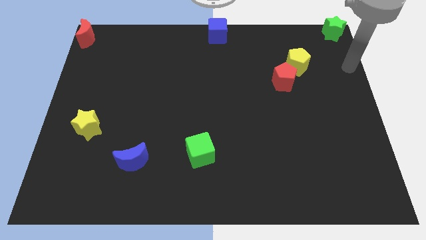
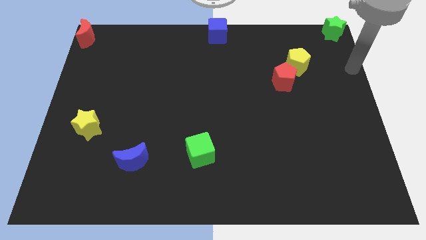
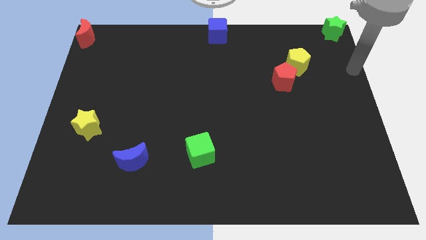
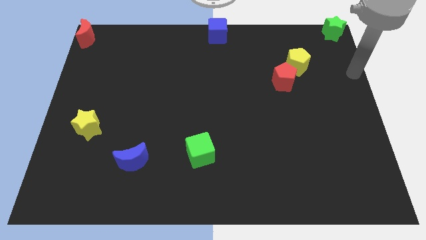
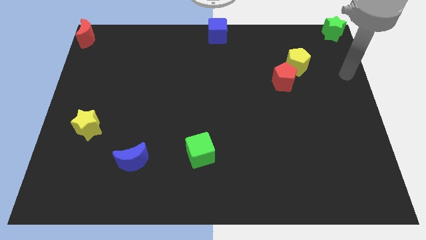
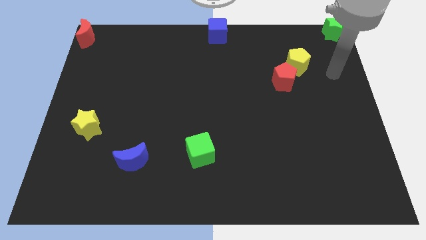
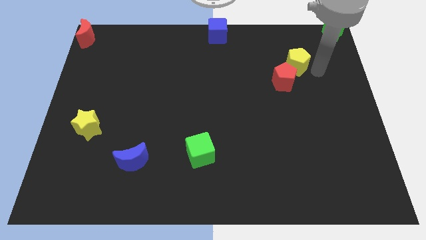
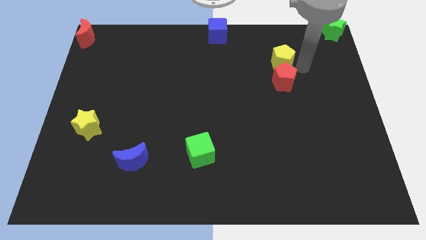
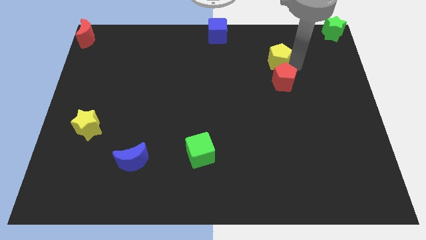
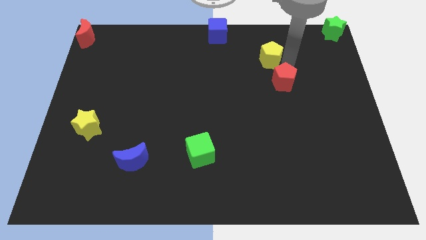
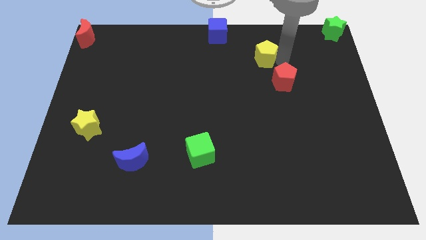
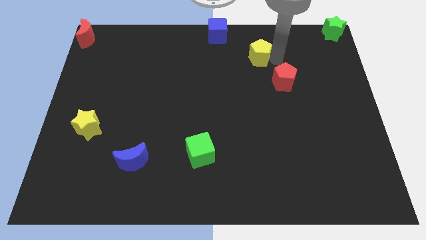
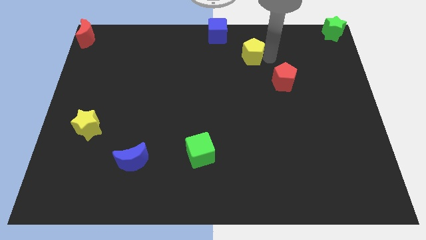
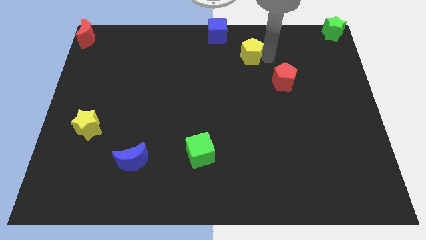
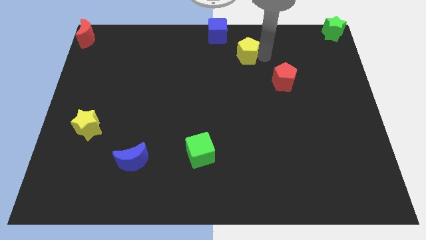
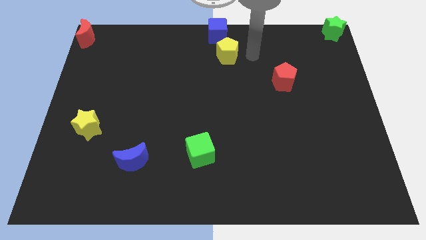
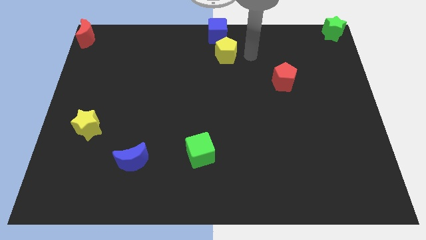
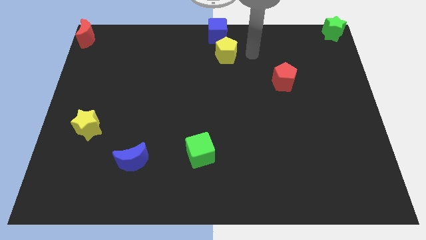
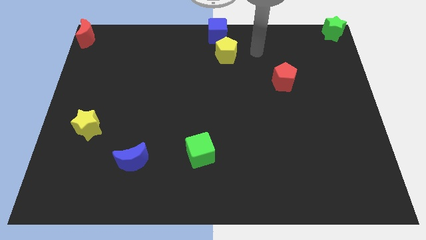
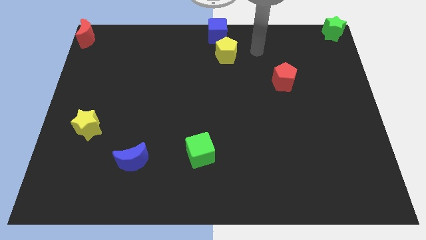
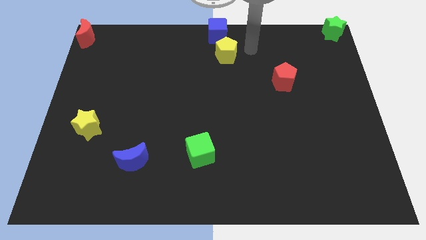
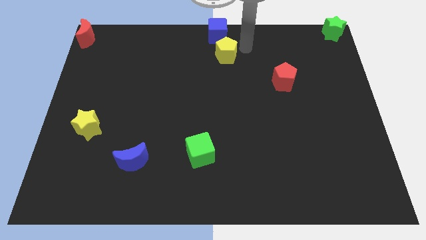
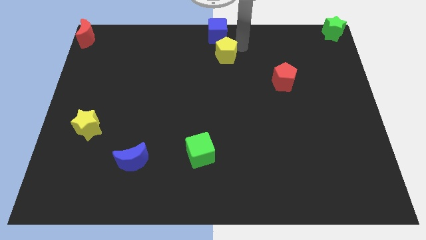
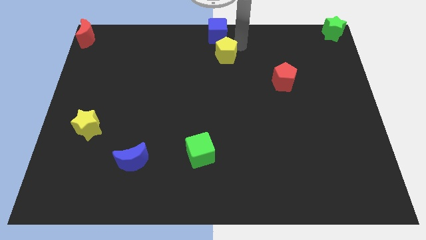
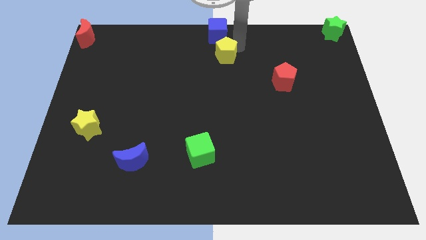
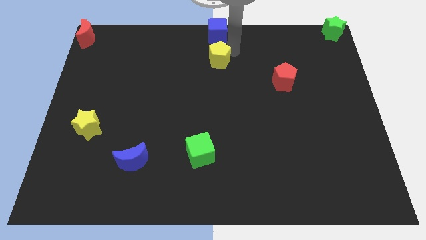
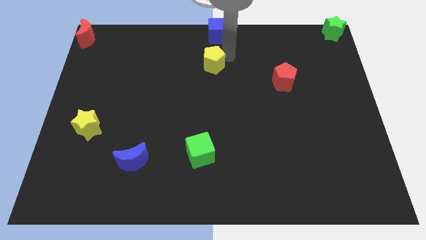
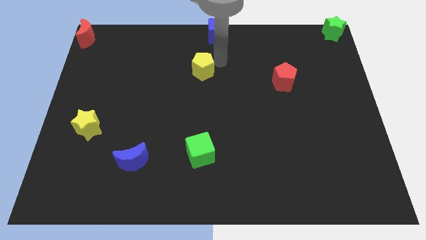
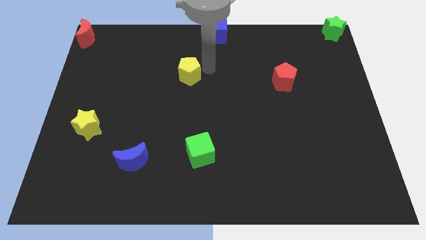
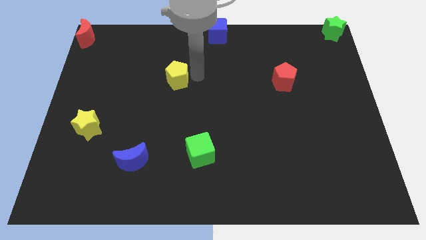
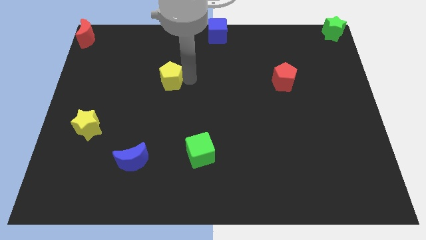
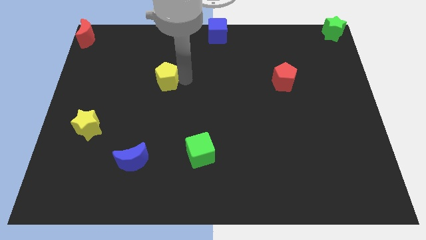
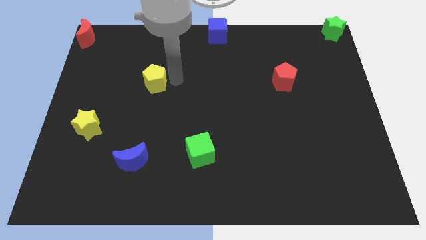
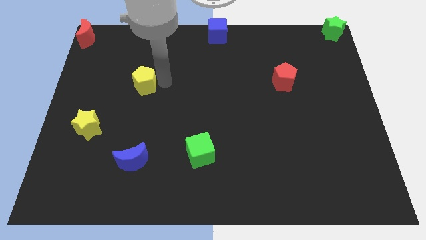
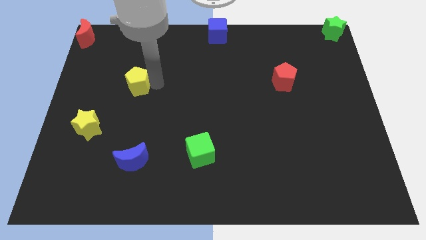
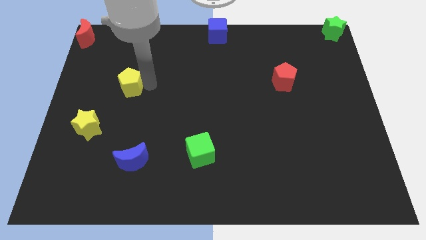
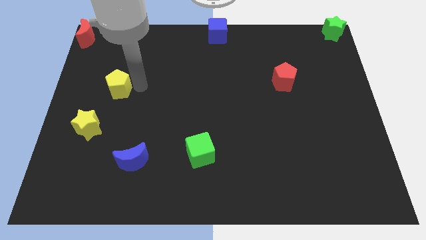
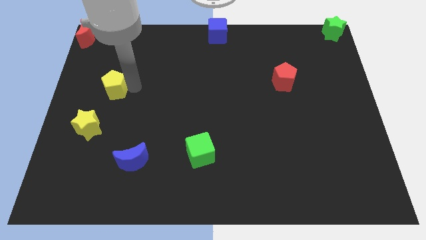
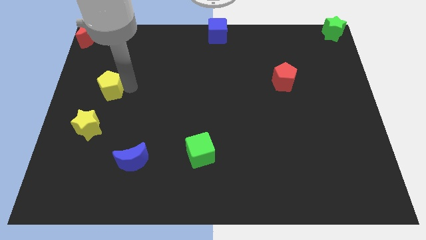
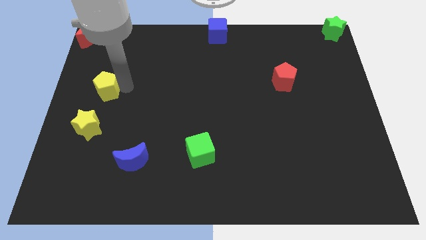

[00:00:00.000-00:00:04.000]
move the yellow pentagon diagonal right of yellow star

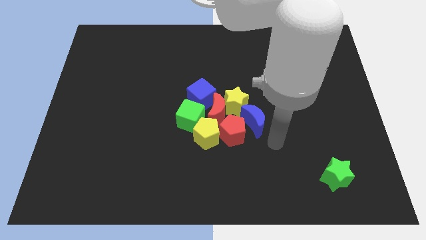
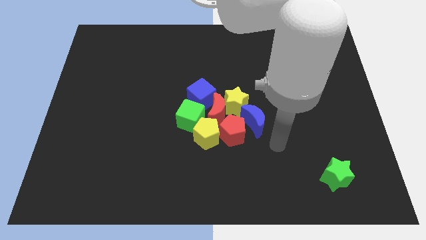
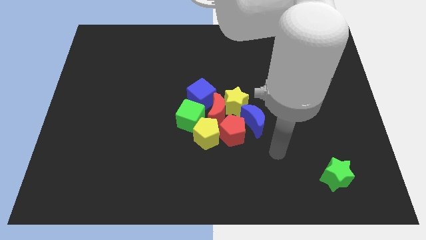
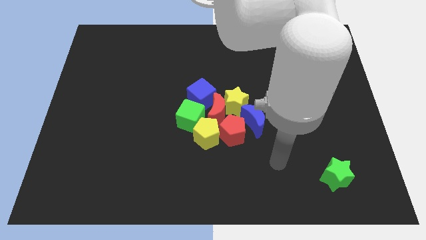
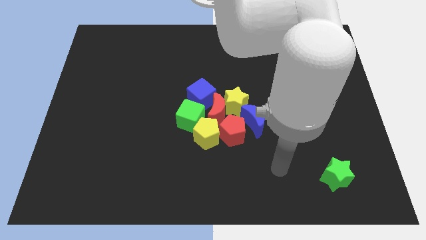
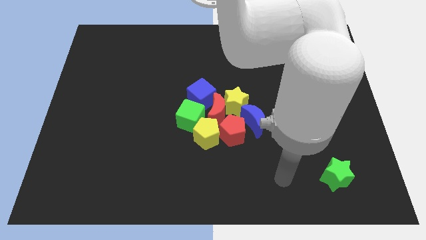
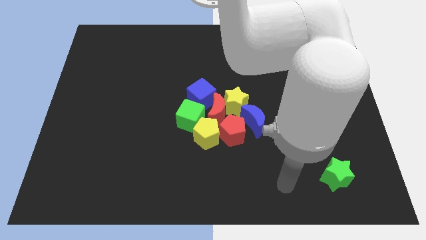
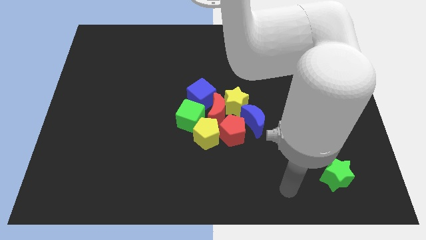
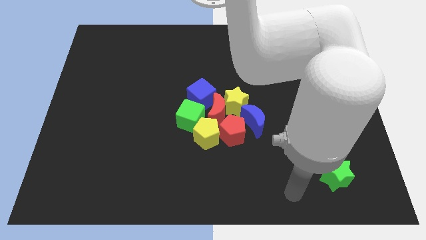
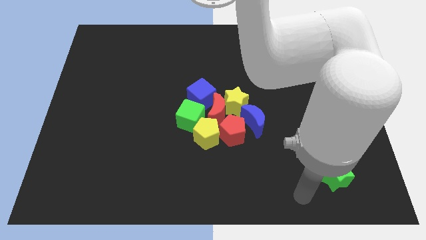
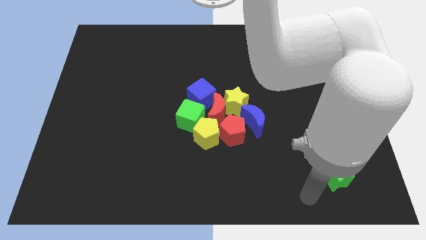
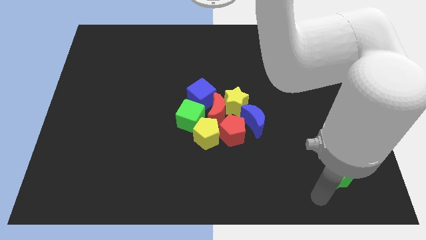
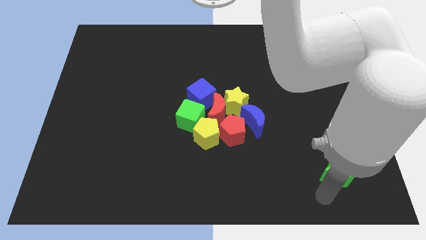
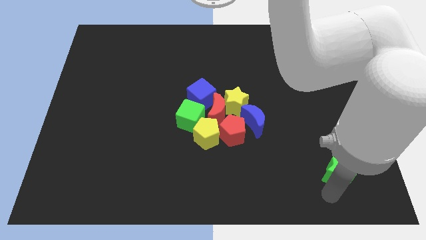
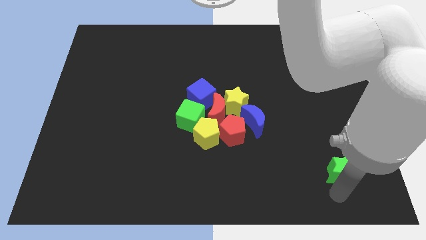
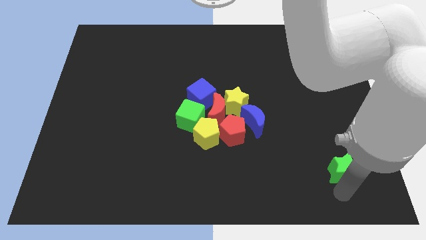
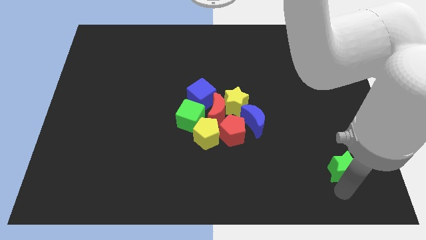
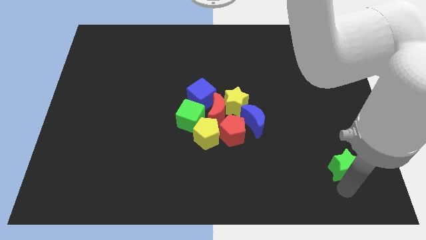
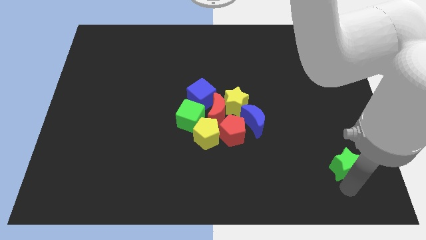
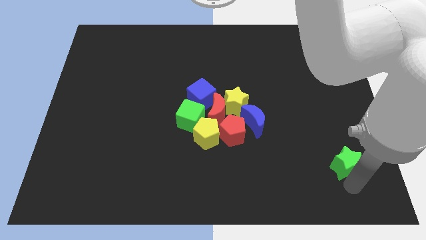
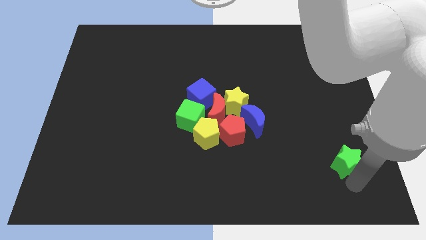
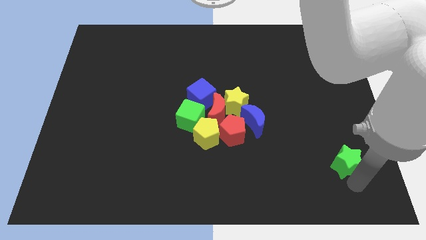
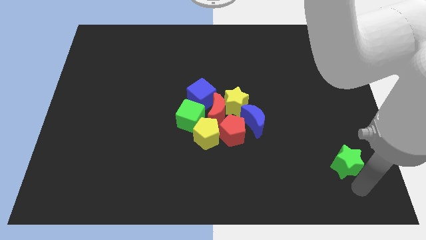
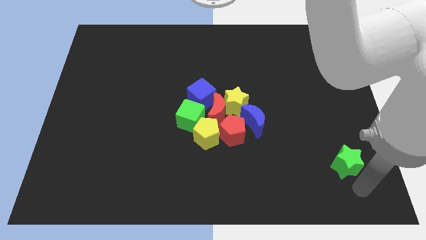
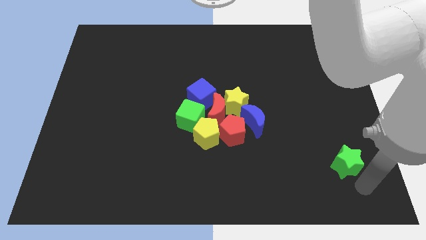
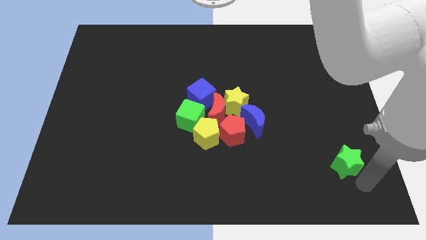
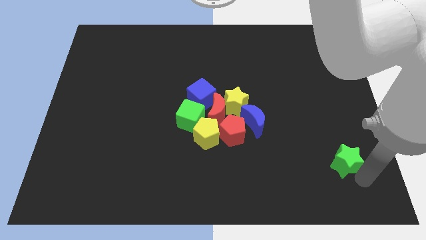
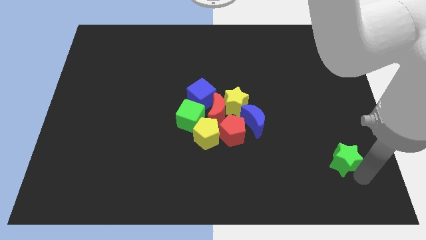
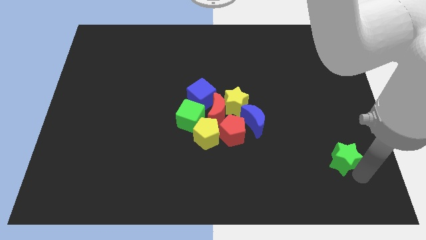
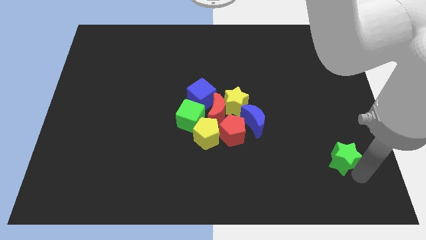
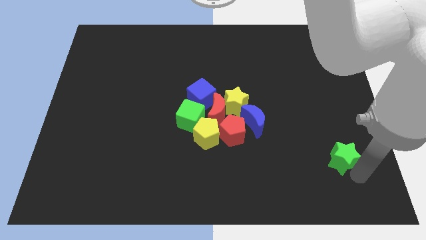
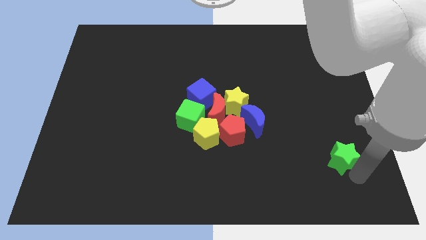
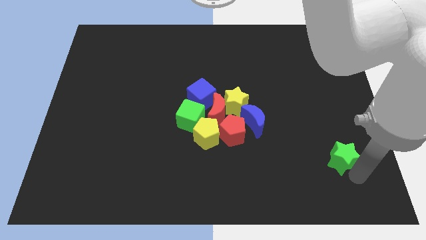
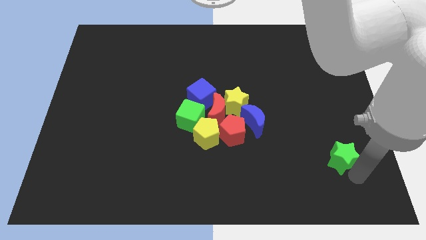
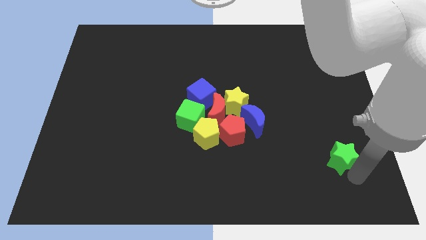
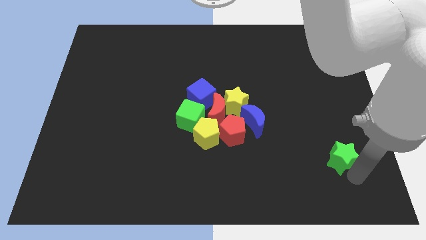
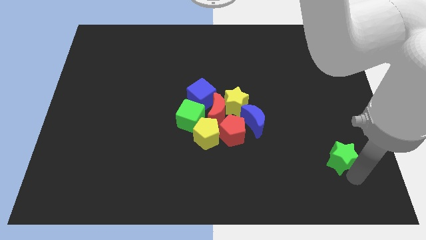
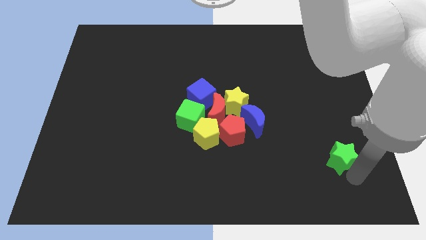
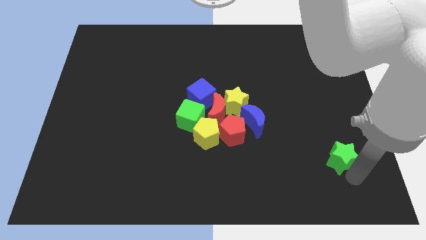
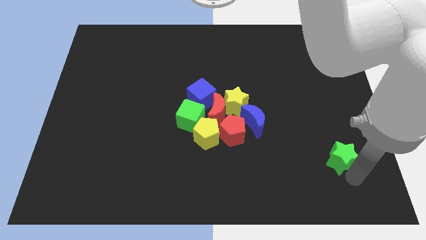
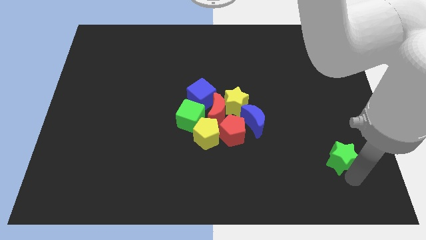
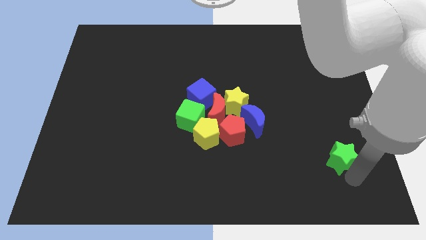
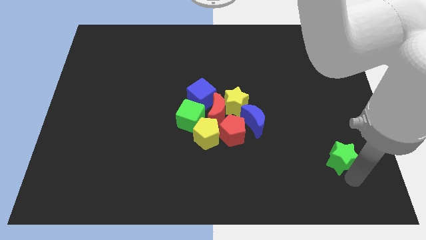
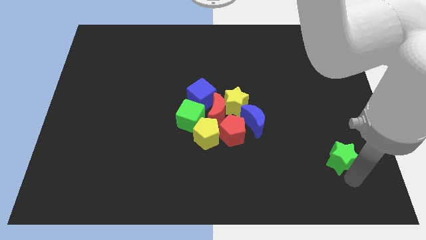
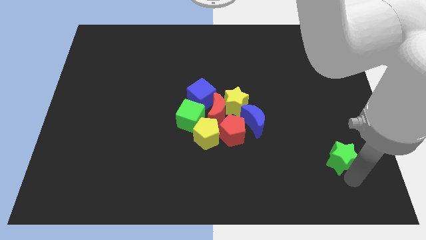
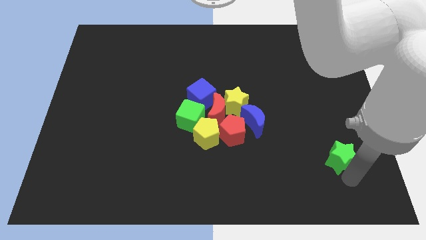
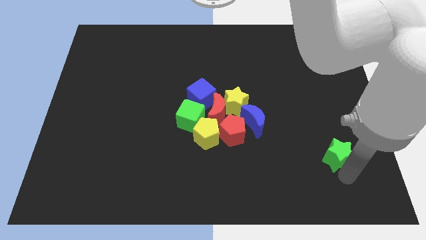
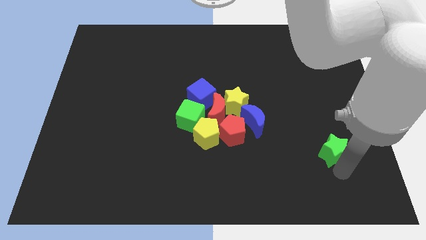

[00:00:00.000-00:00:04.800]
push the green star slightly to the top

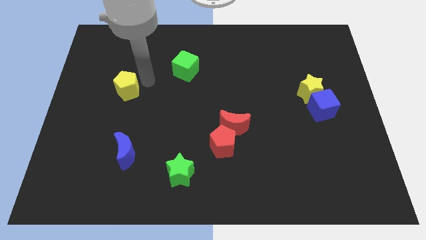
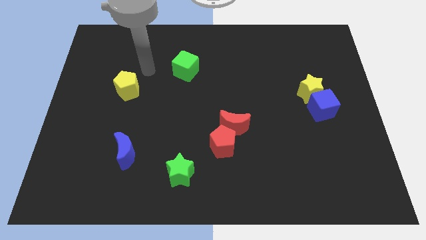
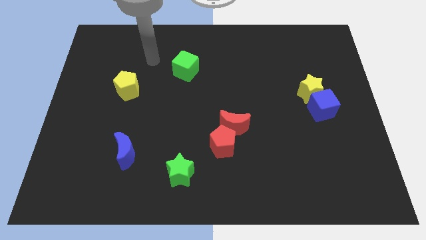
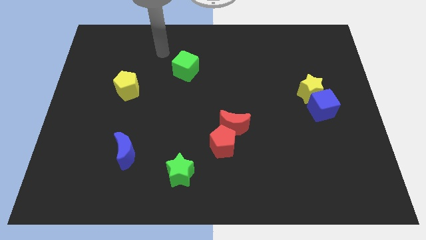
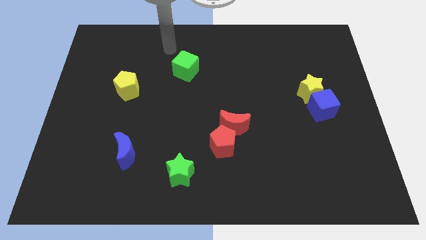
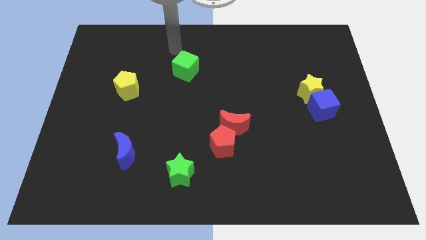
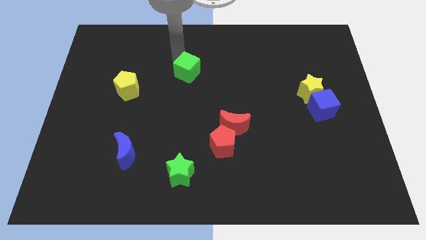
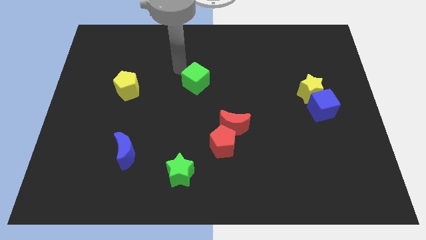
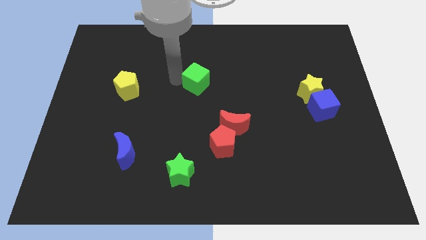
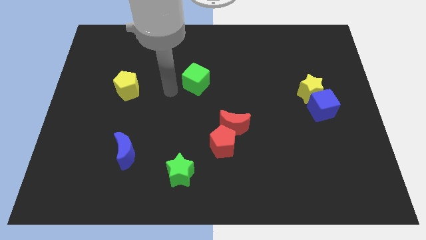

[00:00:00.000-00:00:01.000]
push the green cube towards the center of the board
